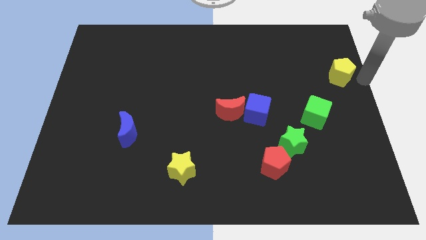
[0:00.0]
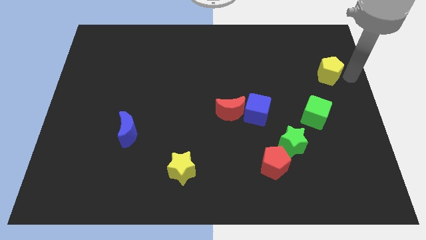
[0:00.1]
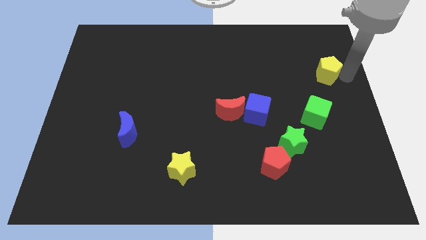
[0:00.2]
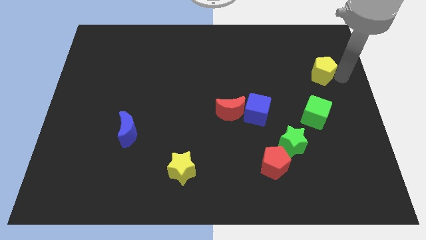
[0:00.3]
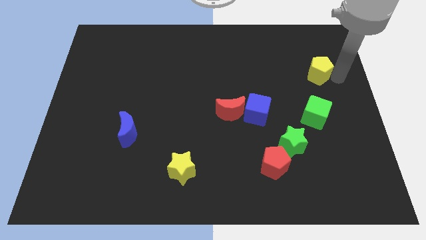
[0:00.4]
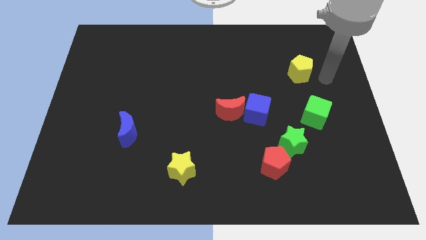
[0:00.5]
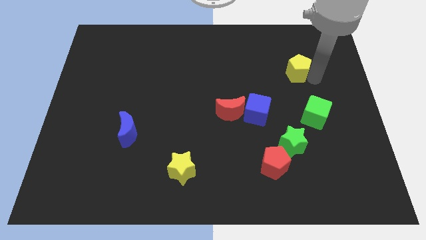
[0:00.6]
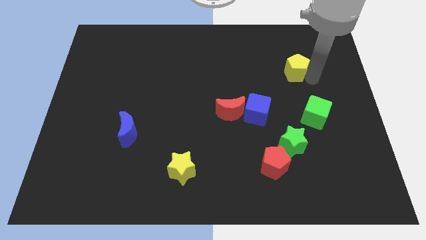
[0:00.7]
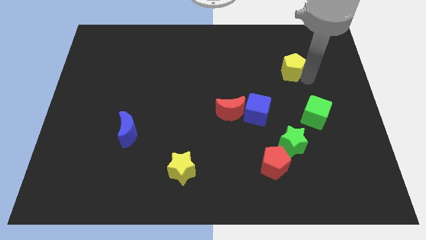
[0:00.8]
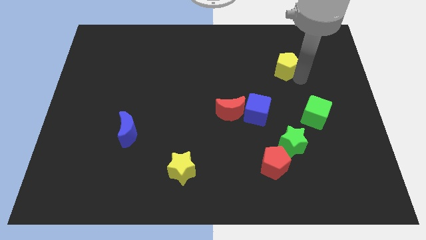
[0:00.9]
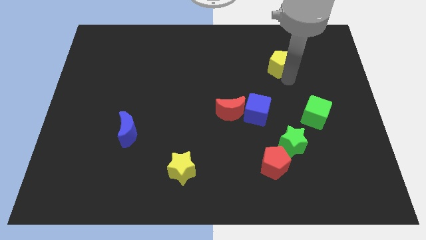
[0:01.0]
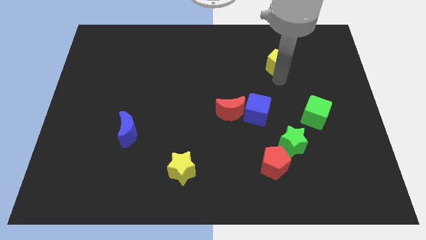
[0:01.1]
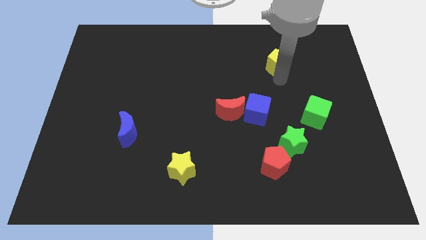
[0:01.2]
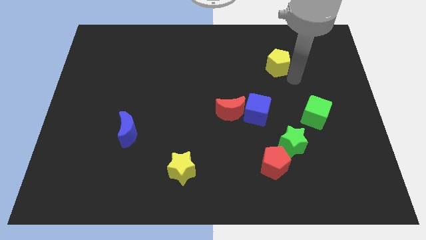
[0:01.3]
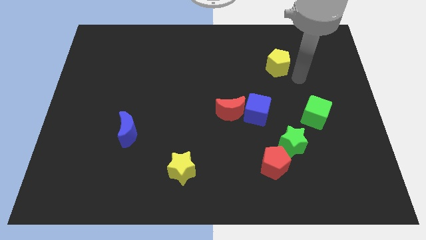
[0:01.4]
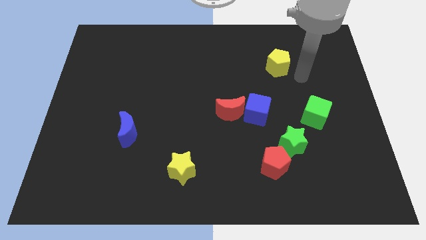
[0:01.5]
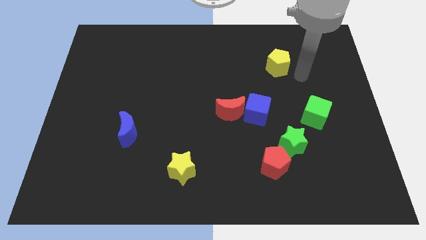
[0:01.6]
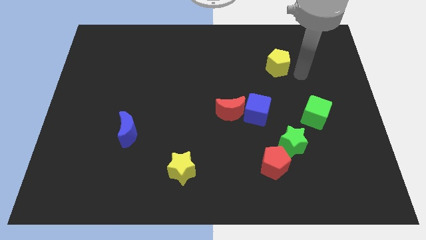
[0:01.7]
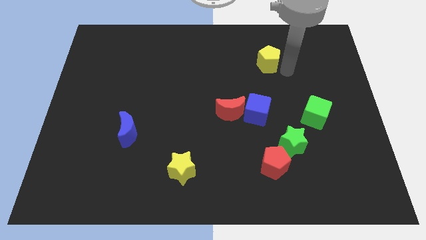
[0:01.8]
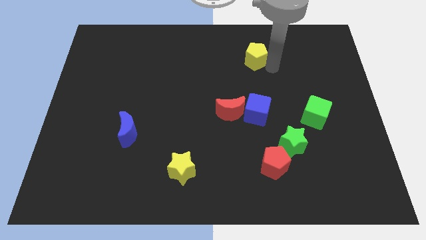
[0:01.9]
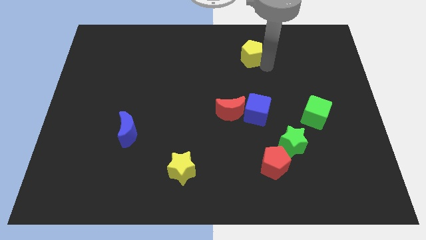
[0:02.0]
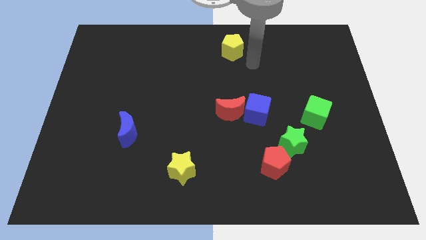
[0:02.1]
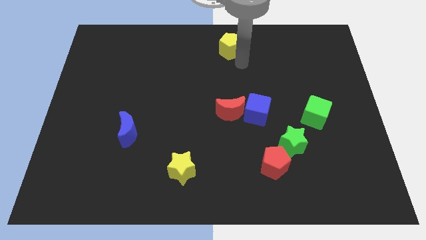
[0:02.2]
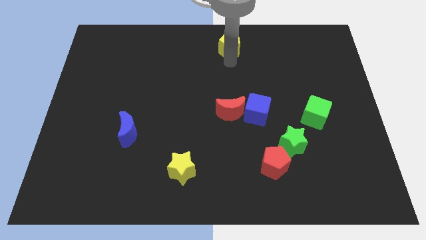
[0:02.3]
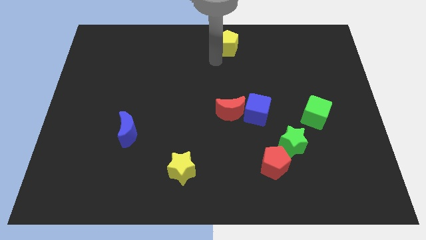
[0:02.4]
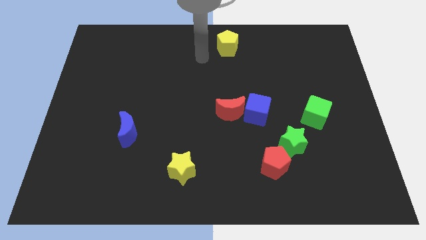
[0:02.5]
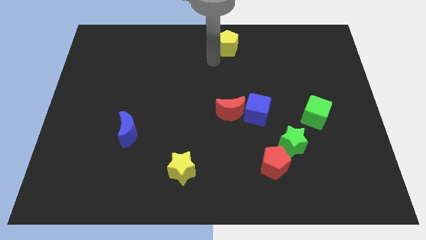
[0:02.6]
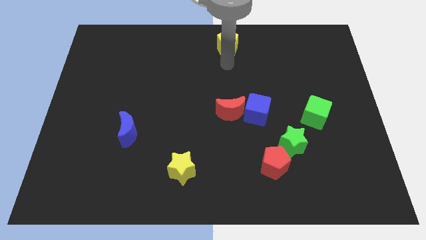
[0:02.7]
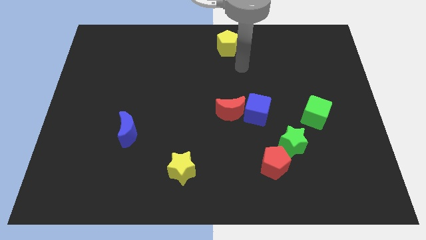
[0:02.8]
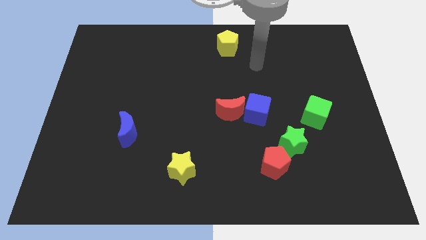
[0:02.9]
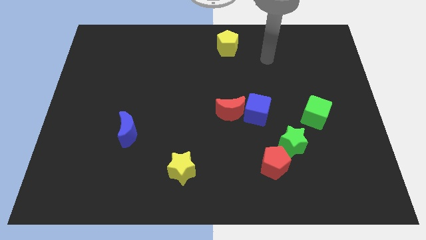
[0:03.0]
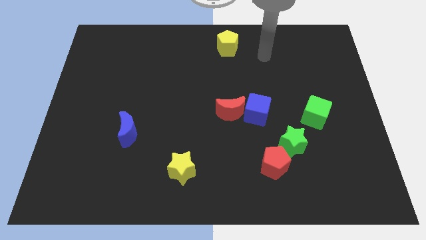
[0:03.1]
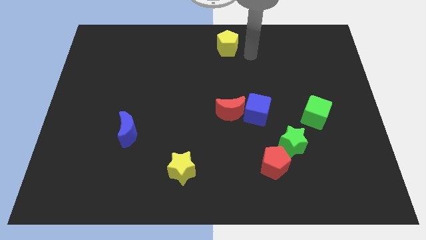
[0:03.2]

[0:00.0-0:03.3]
put the yellow pentagon vertically above the red moon

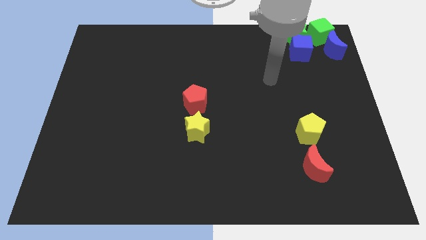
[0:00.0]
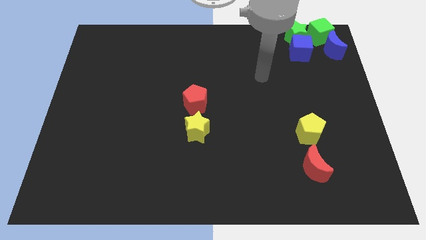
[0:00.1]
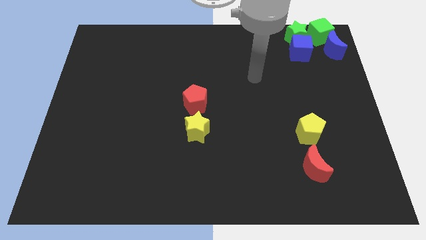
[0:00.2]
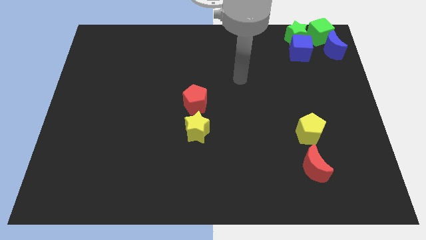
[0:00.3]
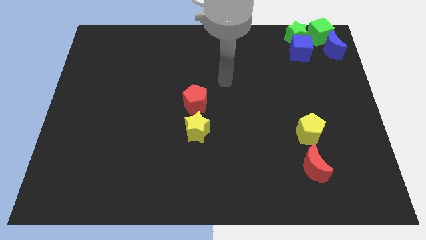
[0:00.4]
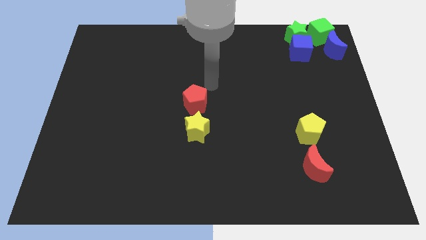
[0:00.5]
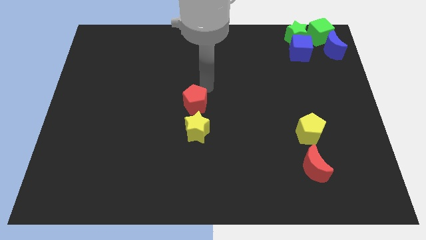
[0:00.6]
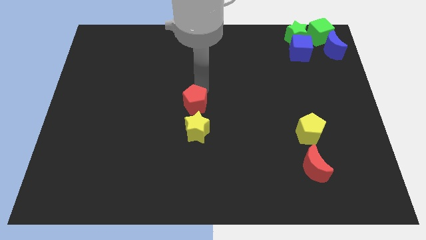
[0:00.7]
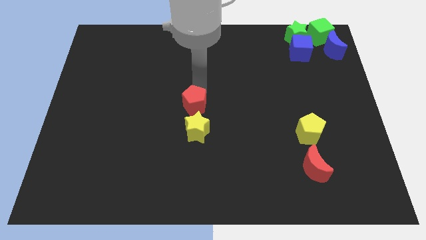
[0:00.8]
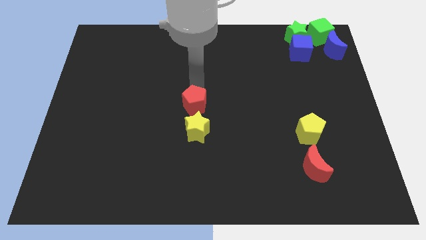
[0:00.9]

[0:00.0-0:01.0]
point your arm above red pentagon

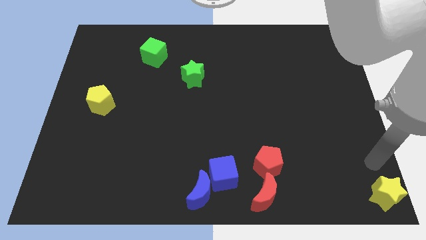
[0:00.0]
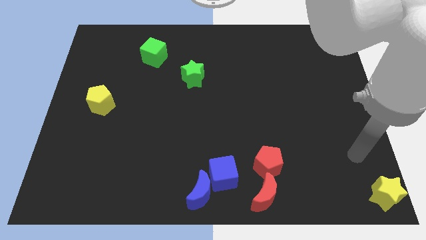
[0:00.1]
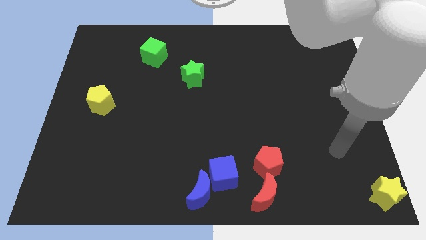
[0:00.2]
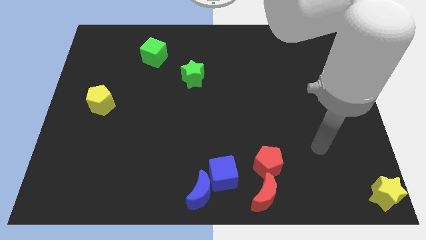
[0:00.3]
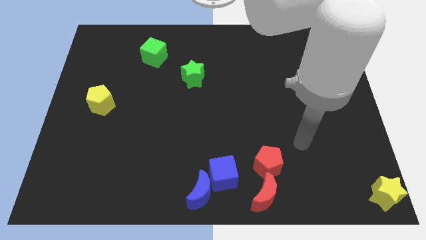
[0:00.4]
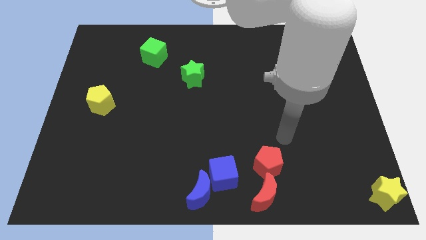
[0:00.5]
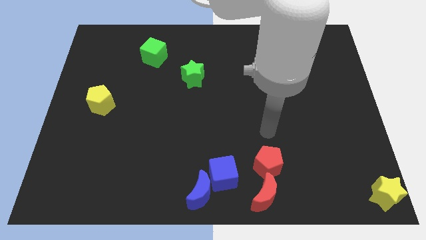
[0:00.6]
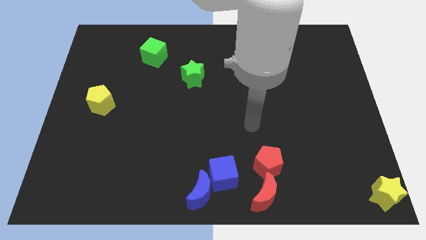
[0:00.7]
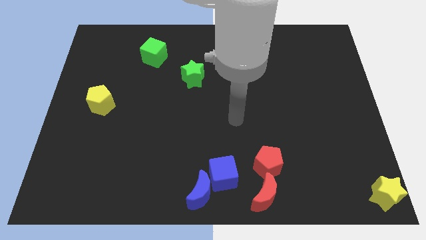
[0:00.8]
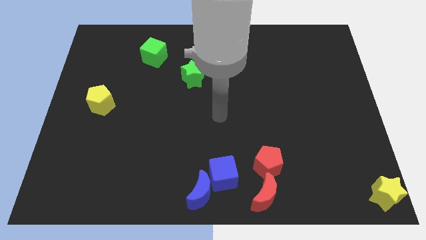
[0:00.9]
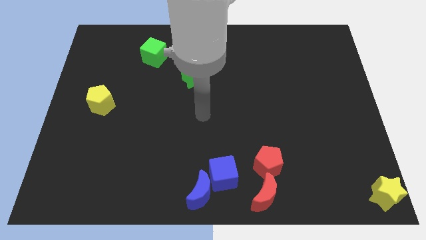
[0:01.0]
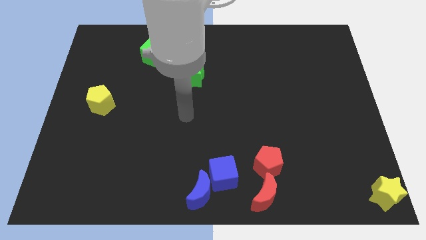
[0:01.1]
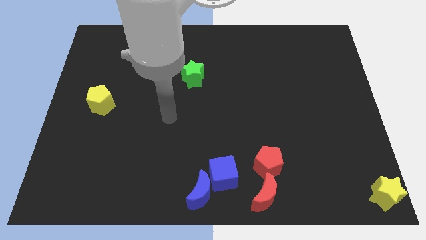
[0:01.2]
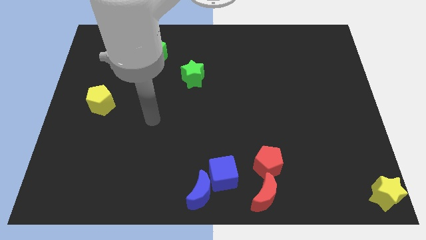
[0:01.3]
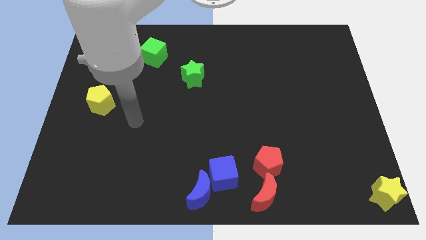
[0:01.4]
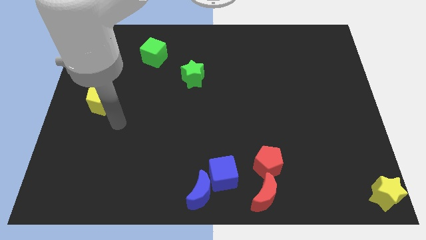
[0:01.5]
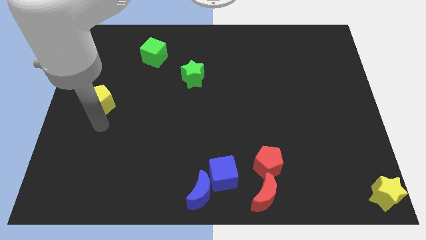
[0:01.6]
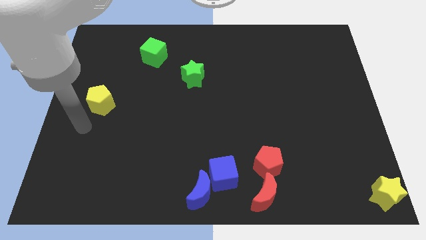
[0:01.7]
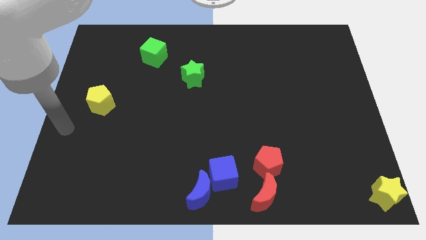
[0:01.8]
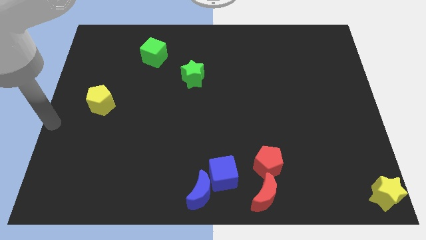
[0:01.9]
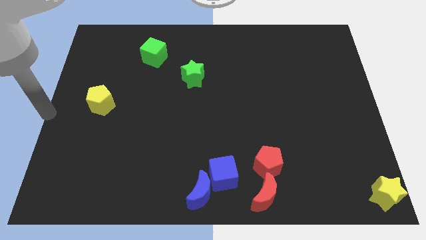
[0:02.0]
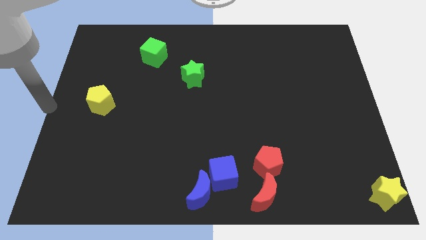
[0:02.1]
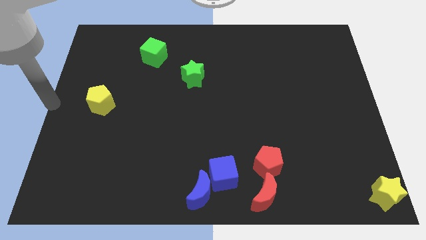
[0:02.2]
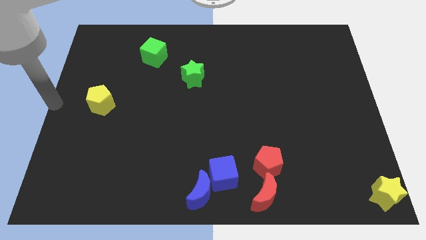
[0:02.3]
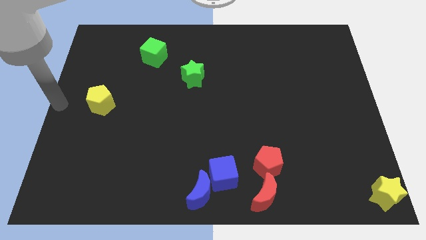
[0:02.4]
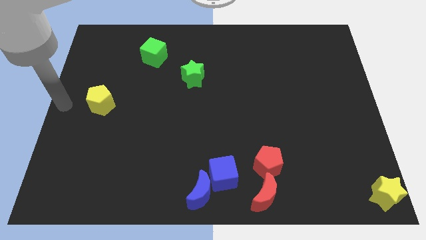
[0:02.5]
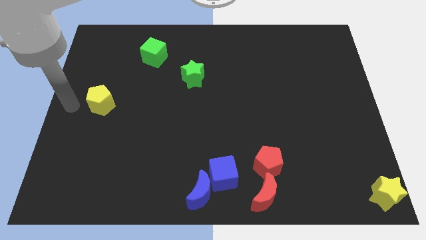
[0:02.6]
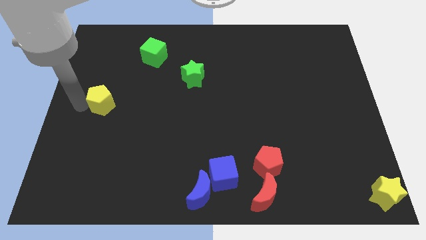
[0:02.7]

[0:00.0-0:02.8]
move your arm away from the yellow star

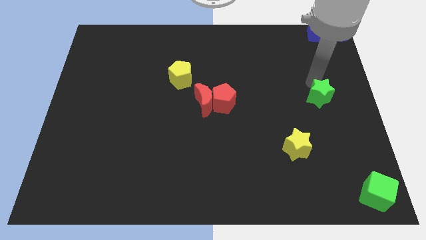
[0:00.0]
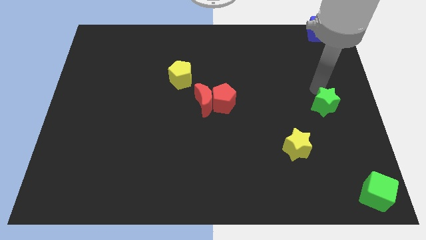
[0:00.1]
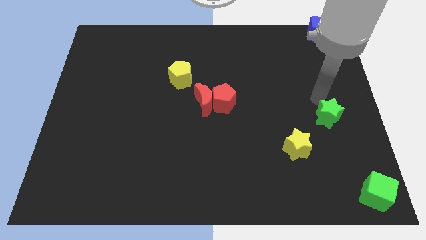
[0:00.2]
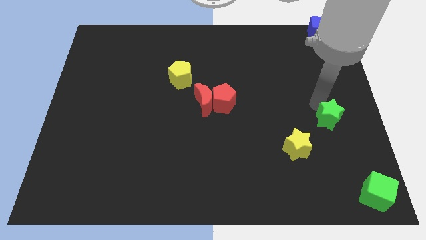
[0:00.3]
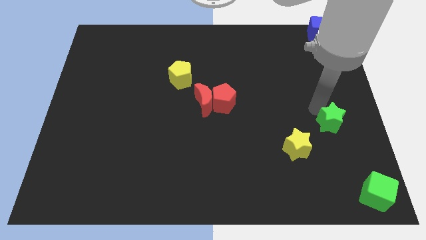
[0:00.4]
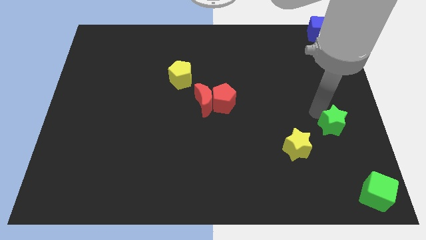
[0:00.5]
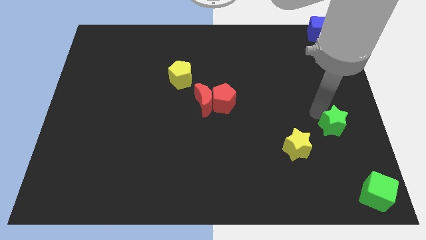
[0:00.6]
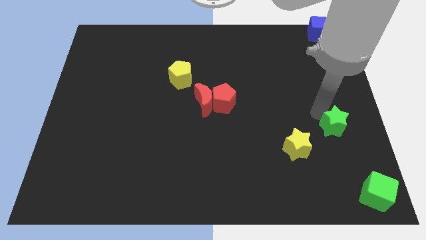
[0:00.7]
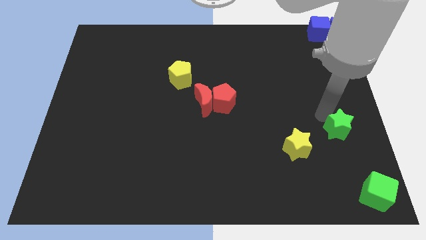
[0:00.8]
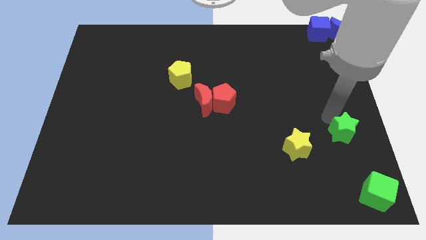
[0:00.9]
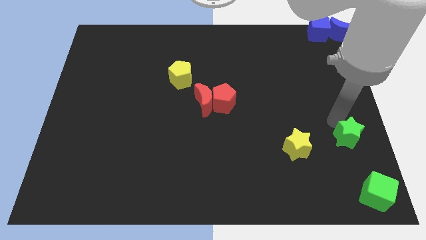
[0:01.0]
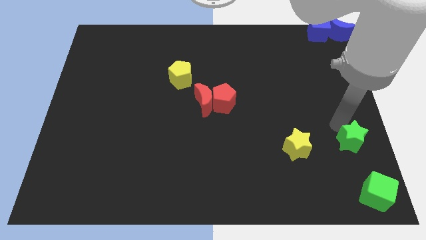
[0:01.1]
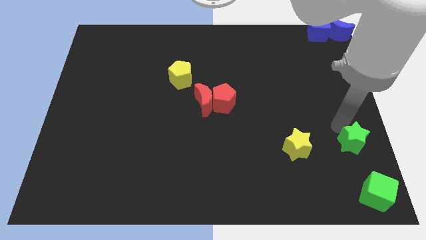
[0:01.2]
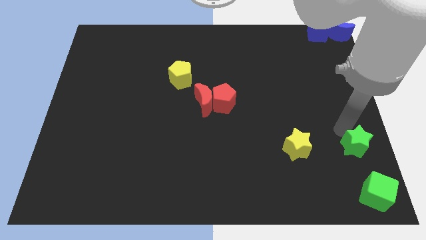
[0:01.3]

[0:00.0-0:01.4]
push the green star towards the green cube

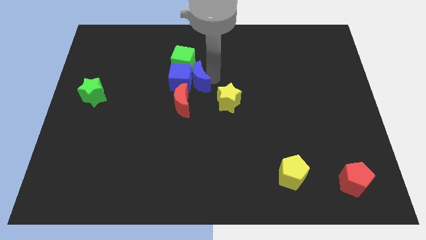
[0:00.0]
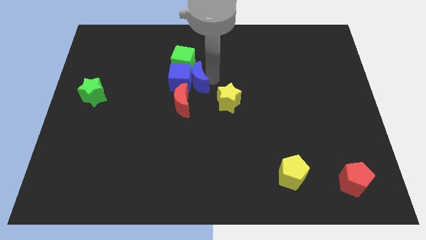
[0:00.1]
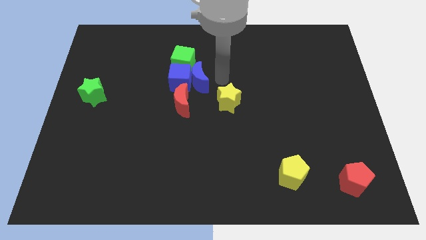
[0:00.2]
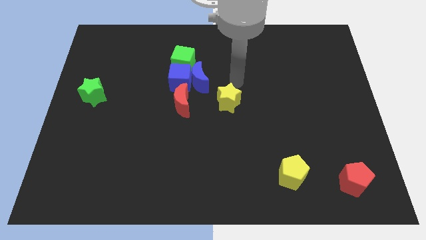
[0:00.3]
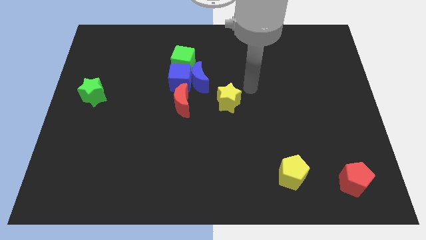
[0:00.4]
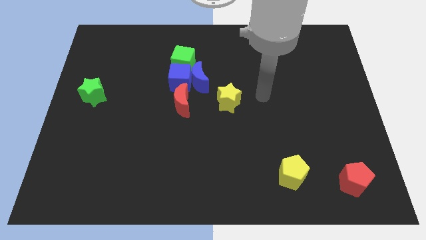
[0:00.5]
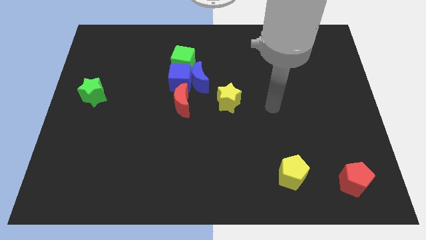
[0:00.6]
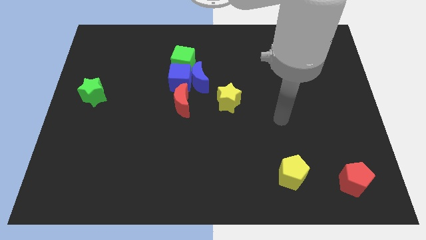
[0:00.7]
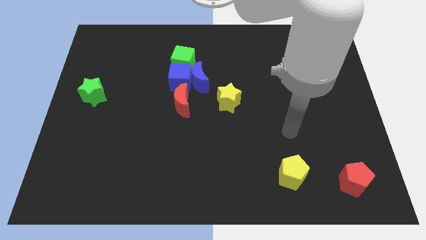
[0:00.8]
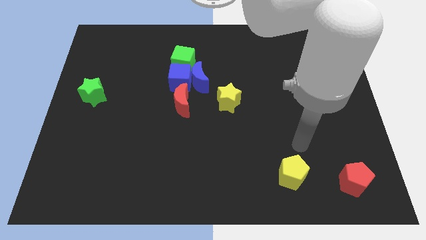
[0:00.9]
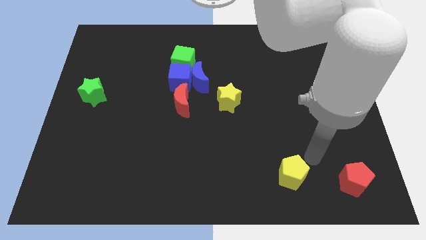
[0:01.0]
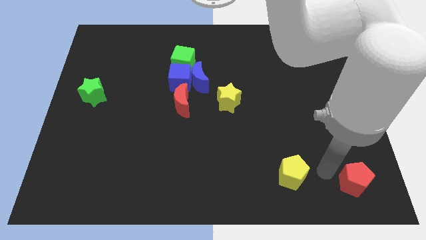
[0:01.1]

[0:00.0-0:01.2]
move your arm towards the yellow pentagon
